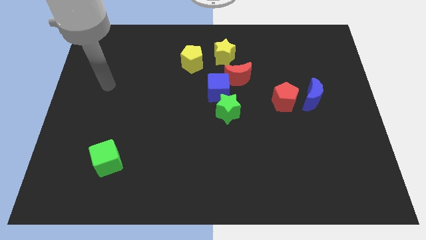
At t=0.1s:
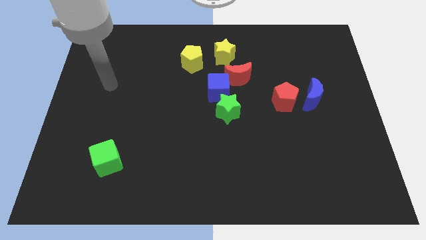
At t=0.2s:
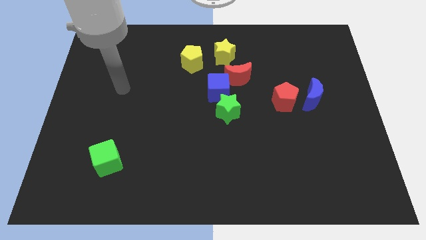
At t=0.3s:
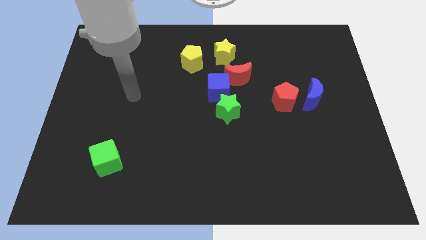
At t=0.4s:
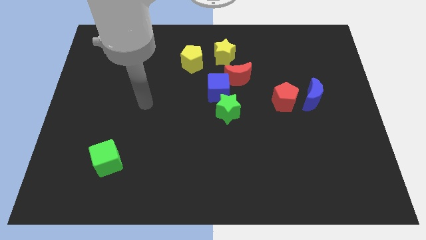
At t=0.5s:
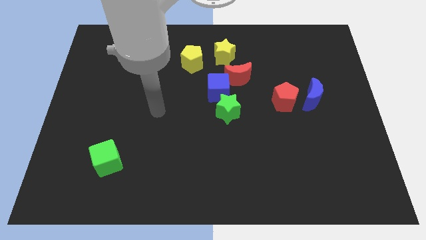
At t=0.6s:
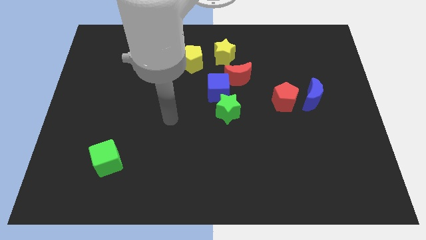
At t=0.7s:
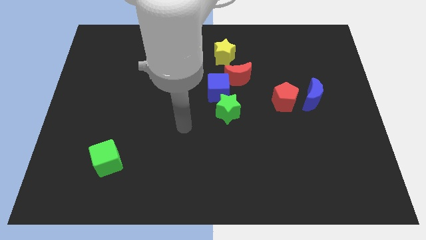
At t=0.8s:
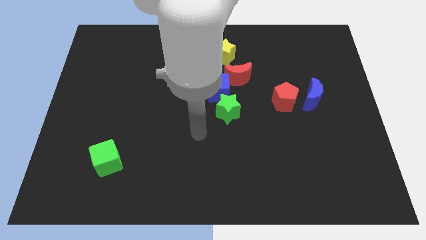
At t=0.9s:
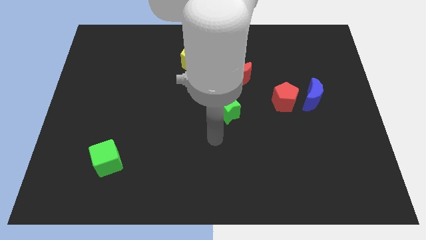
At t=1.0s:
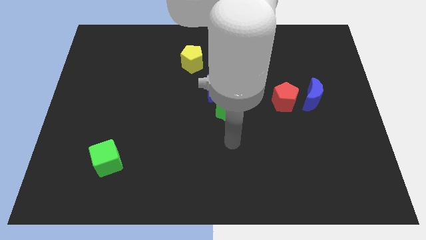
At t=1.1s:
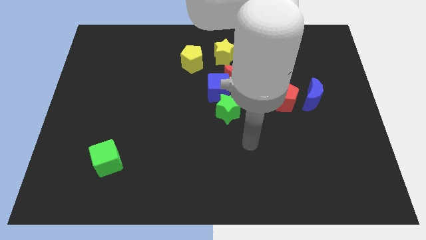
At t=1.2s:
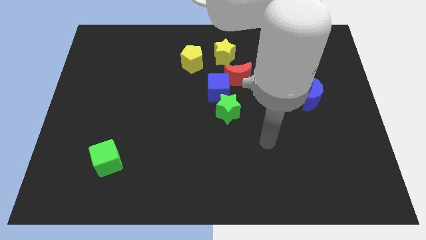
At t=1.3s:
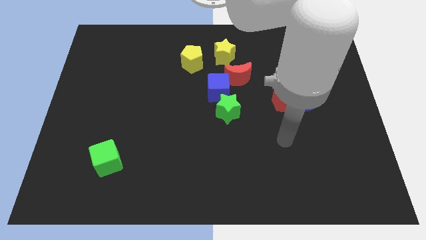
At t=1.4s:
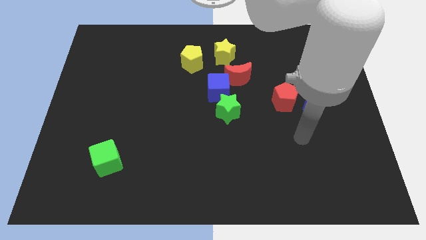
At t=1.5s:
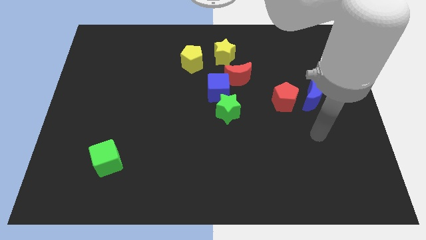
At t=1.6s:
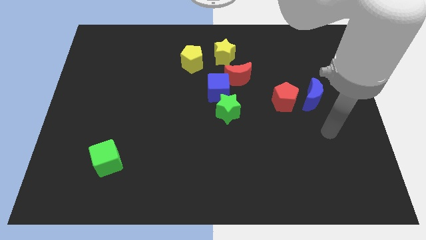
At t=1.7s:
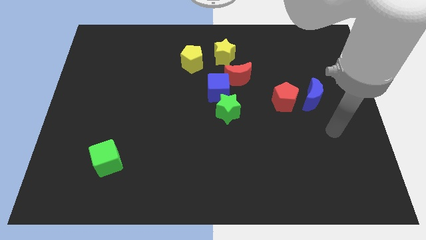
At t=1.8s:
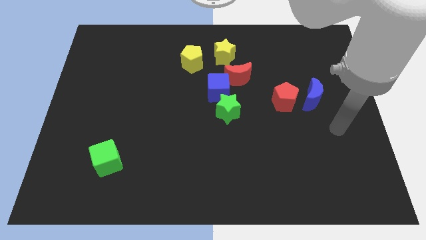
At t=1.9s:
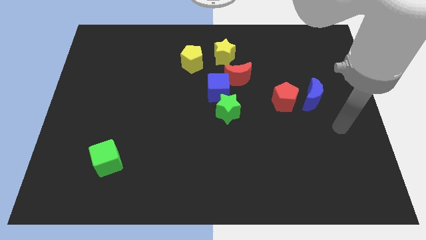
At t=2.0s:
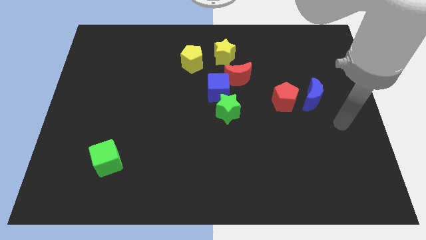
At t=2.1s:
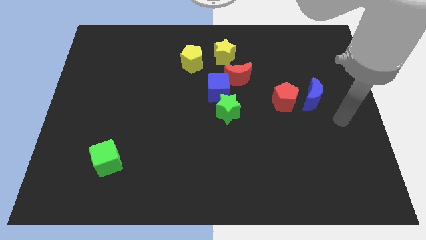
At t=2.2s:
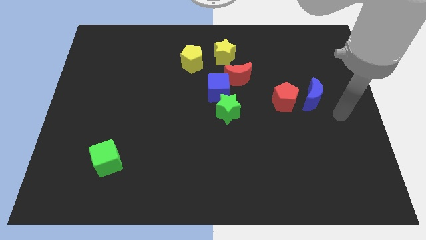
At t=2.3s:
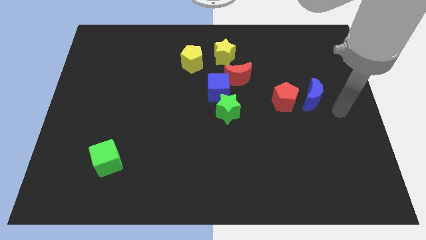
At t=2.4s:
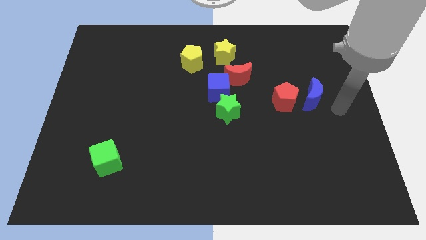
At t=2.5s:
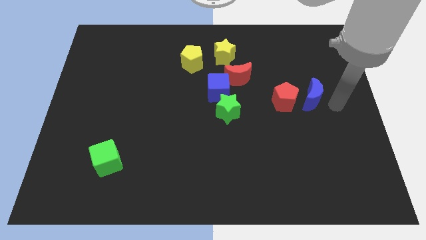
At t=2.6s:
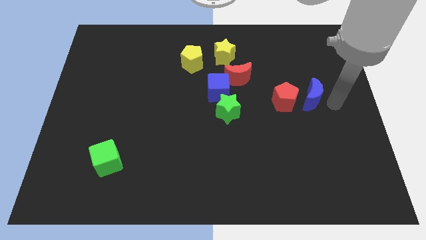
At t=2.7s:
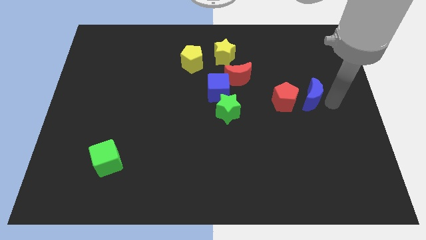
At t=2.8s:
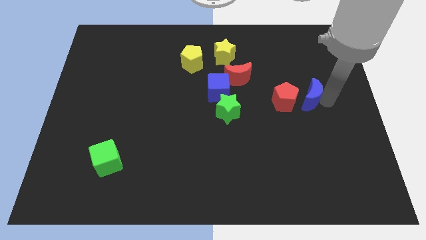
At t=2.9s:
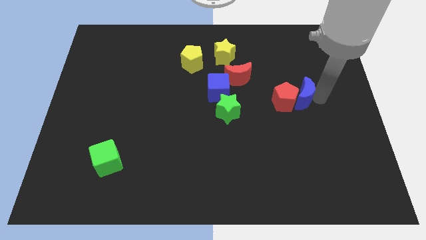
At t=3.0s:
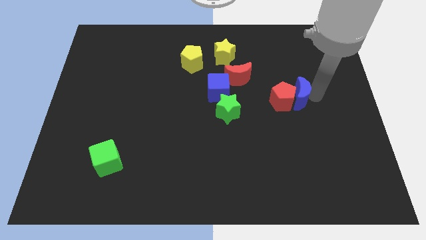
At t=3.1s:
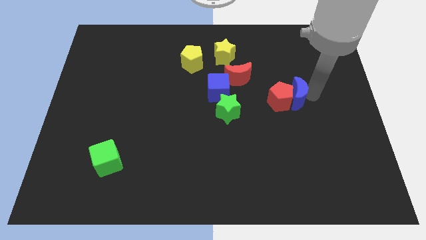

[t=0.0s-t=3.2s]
move blue moon into the red pentagon

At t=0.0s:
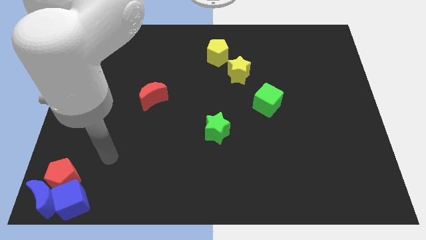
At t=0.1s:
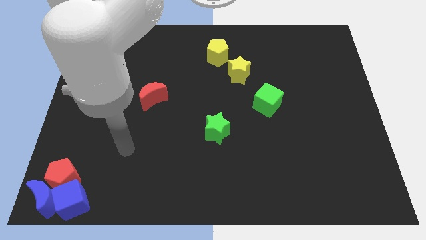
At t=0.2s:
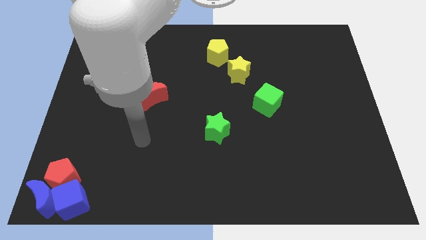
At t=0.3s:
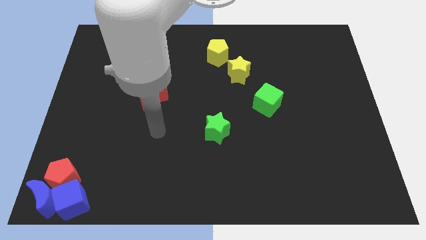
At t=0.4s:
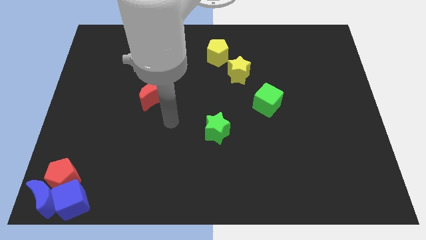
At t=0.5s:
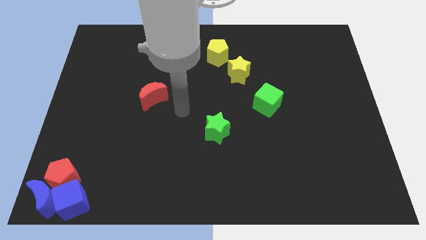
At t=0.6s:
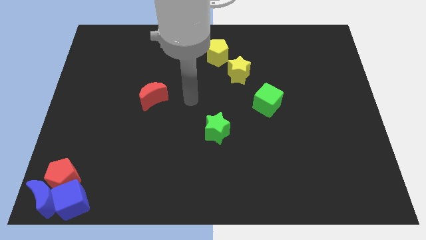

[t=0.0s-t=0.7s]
put your arm at the center of the board

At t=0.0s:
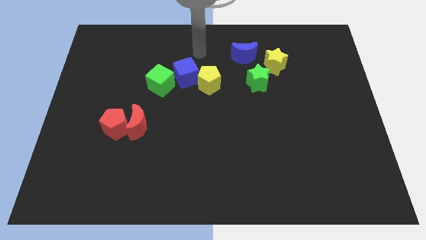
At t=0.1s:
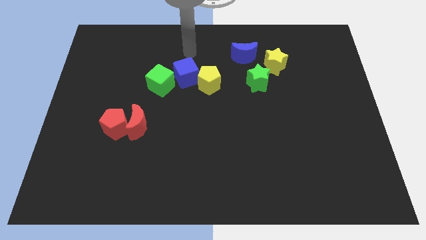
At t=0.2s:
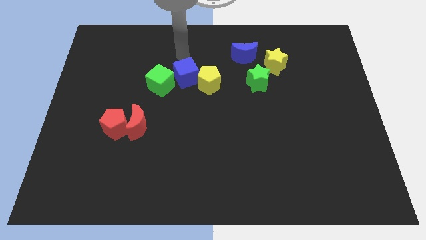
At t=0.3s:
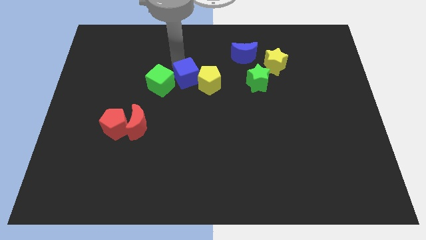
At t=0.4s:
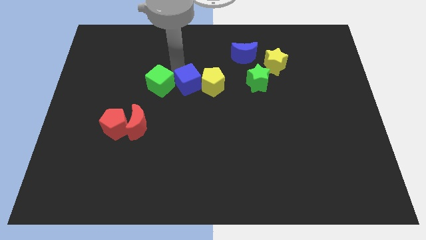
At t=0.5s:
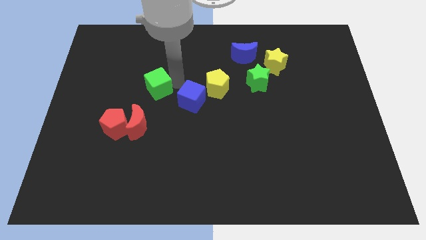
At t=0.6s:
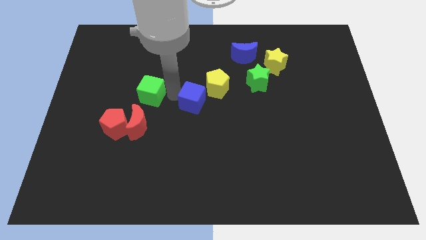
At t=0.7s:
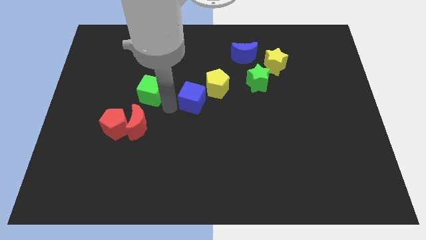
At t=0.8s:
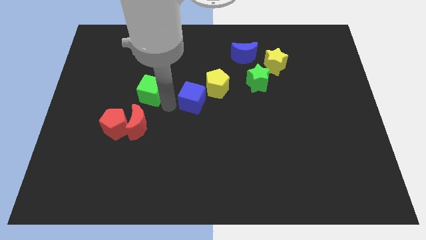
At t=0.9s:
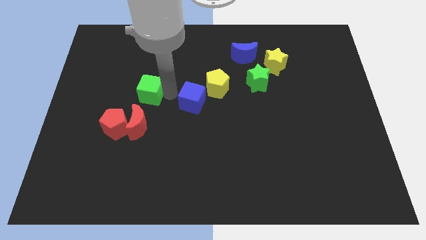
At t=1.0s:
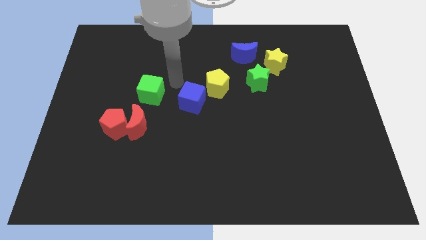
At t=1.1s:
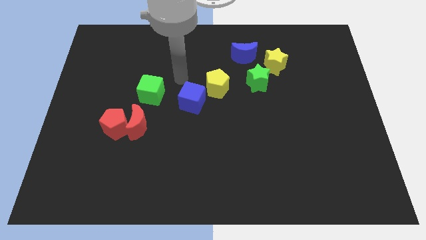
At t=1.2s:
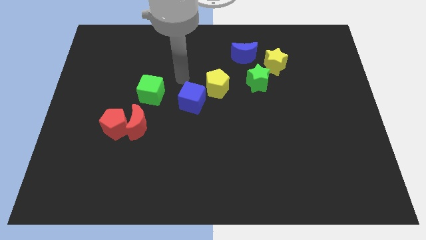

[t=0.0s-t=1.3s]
separate green cube and blue cube

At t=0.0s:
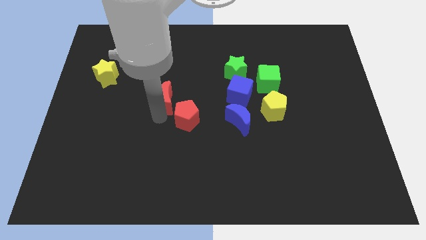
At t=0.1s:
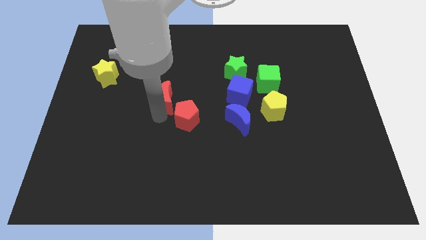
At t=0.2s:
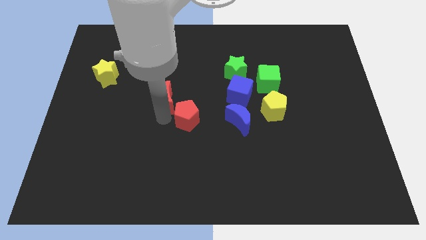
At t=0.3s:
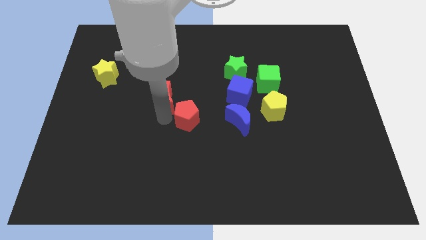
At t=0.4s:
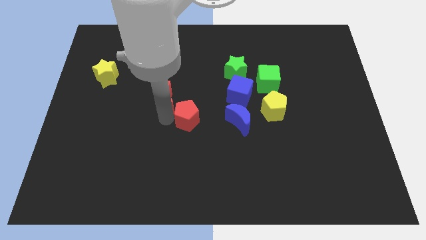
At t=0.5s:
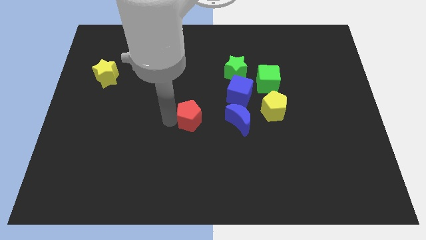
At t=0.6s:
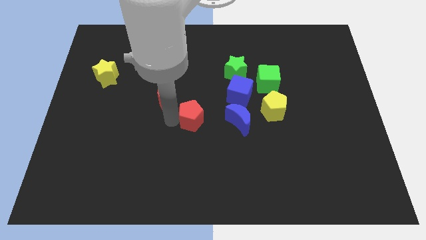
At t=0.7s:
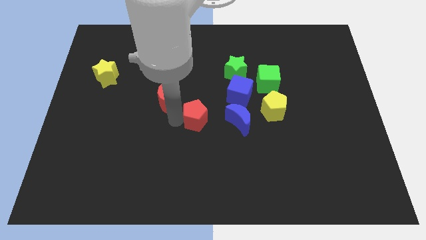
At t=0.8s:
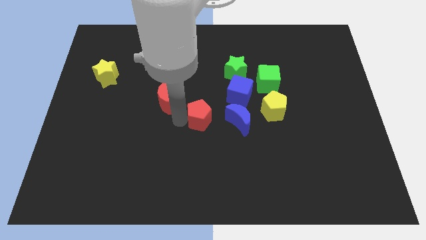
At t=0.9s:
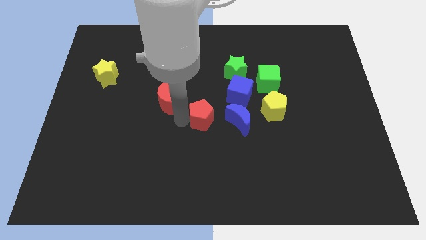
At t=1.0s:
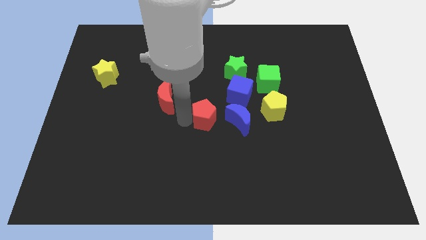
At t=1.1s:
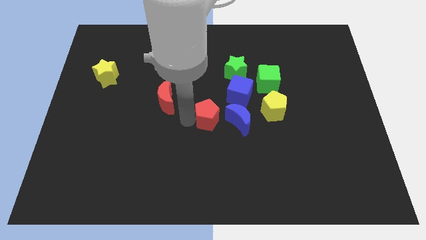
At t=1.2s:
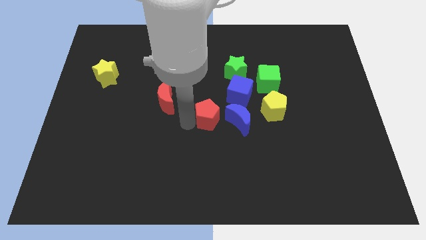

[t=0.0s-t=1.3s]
separate red pentagon from red moon

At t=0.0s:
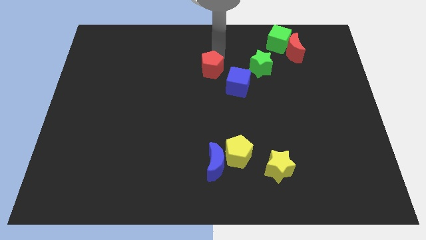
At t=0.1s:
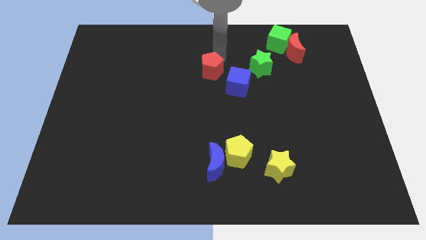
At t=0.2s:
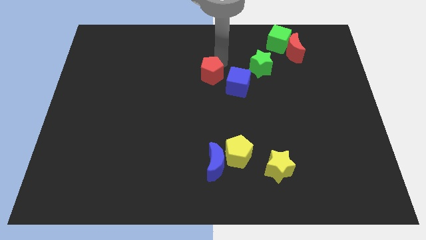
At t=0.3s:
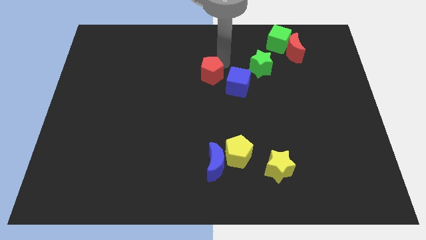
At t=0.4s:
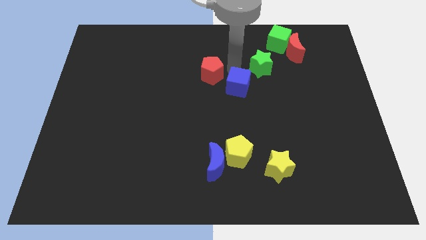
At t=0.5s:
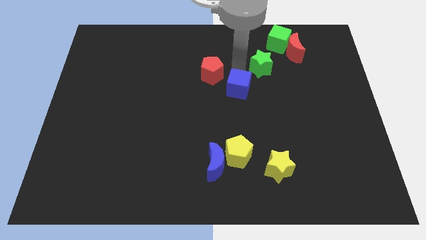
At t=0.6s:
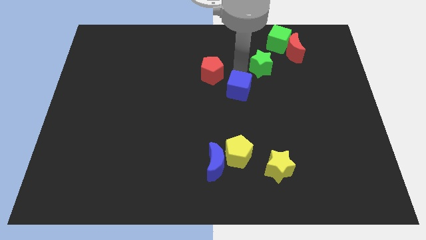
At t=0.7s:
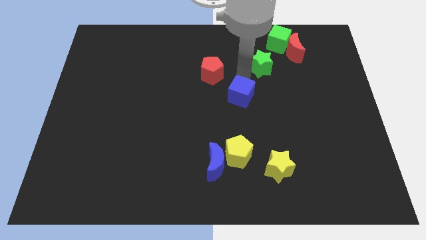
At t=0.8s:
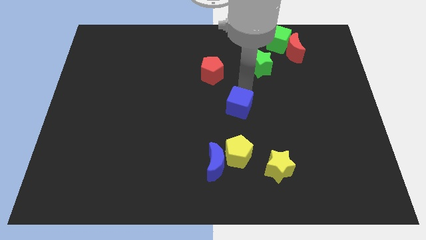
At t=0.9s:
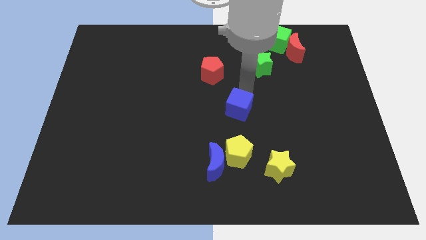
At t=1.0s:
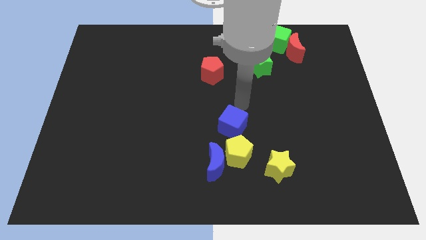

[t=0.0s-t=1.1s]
move blue cube above yellow pentagon

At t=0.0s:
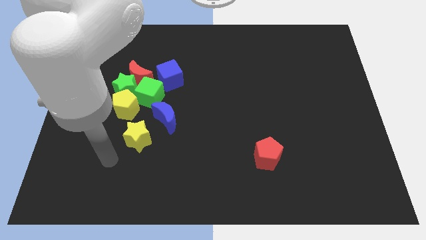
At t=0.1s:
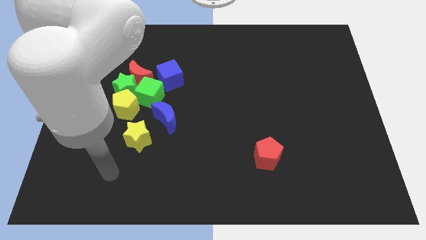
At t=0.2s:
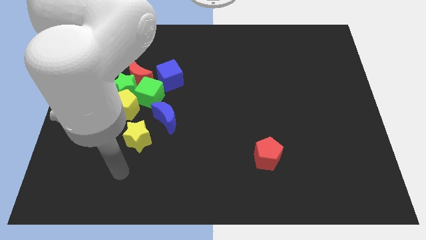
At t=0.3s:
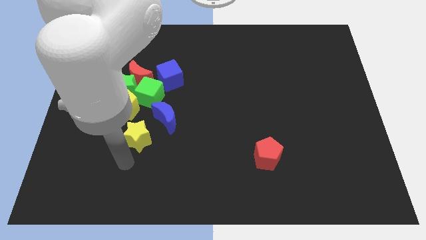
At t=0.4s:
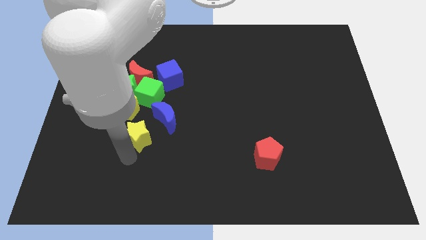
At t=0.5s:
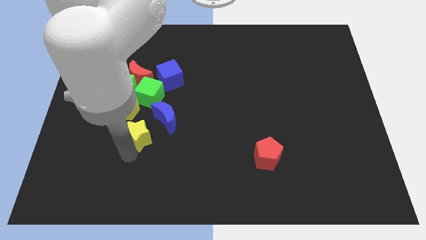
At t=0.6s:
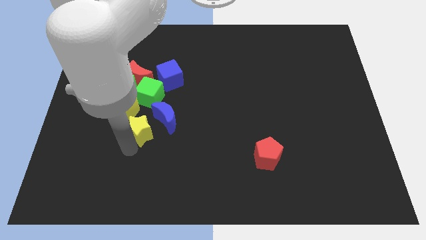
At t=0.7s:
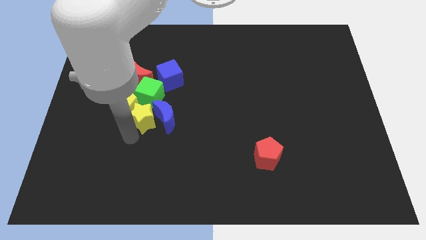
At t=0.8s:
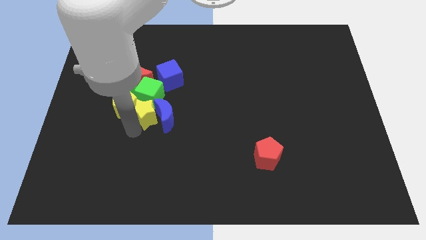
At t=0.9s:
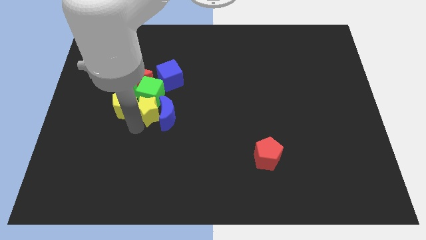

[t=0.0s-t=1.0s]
place yellow star to the bottom of the green cube

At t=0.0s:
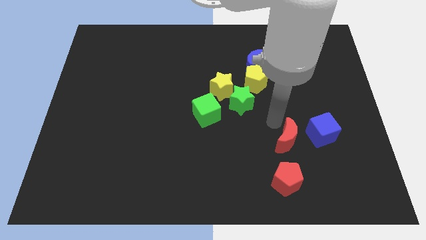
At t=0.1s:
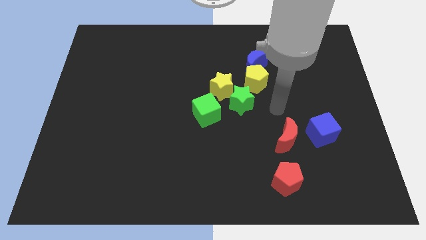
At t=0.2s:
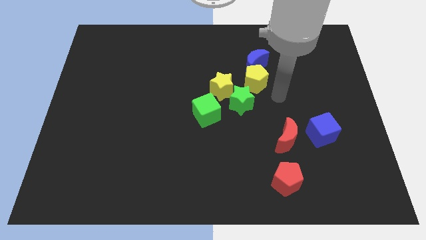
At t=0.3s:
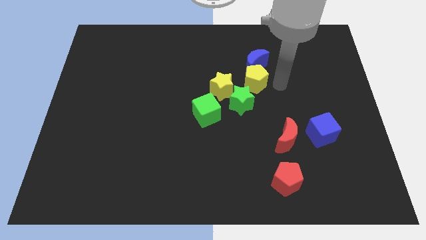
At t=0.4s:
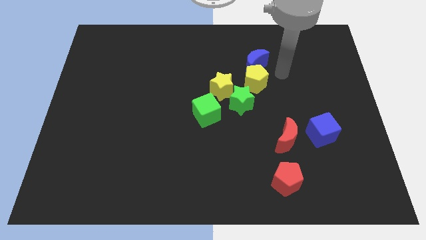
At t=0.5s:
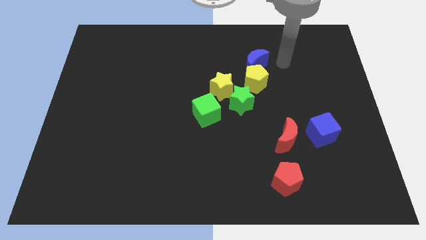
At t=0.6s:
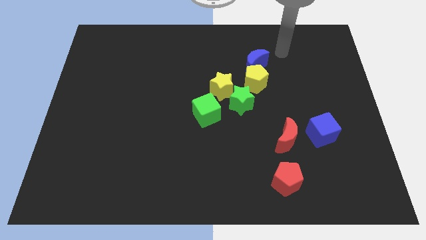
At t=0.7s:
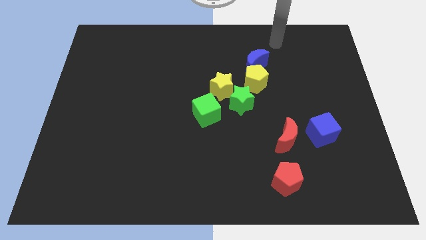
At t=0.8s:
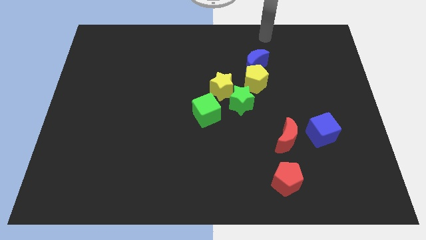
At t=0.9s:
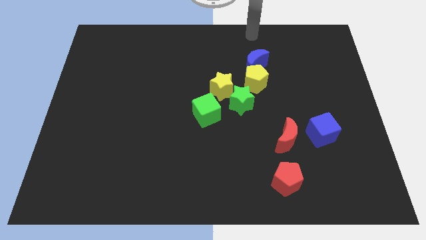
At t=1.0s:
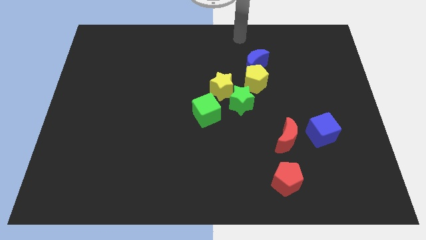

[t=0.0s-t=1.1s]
move your arm away from red crescent
